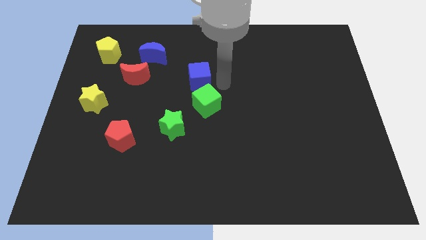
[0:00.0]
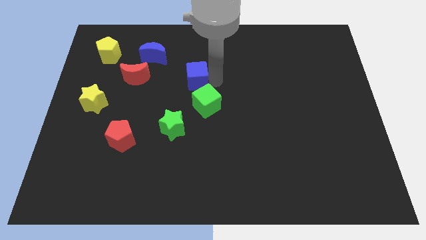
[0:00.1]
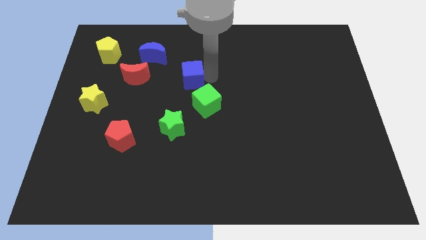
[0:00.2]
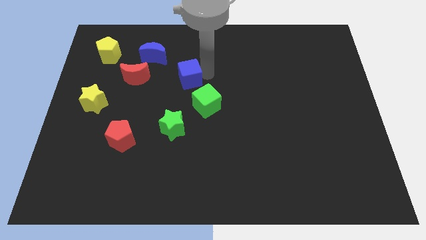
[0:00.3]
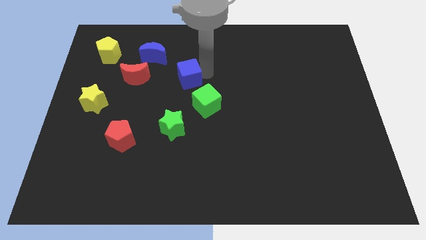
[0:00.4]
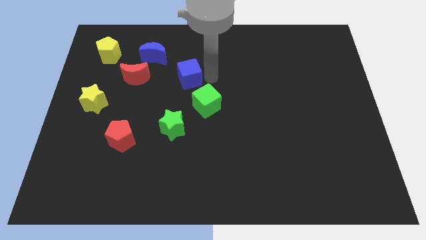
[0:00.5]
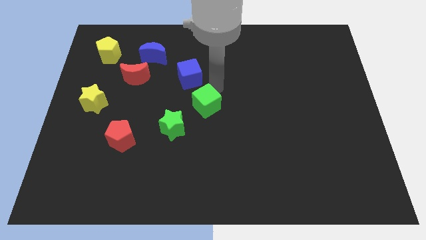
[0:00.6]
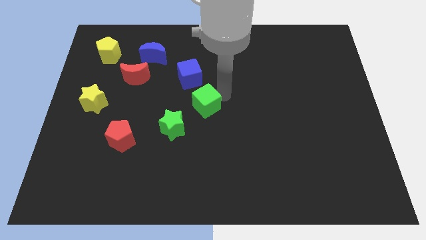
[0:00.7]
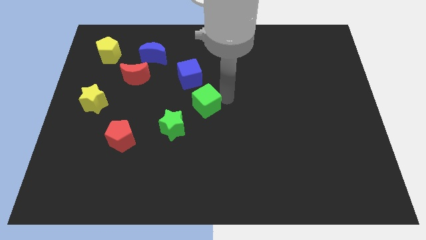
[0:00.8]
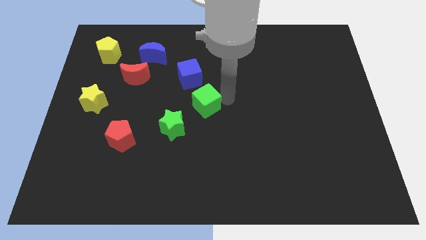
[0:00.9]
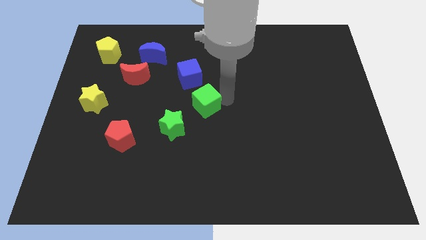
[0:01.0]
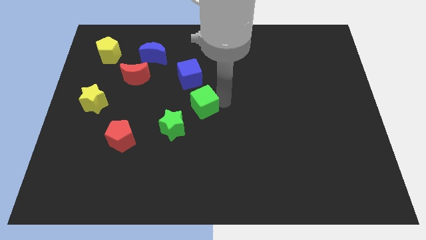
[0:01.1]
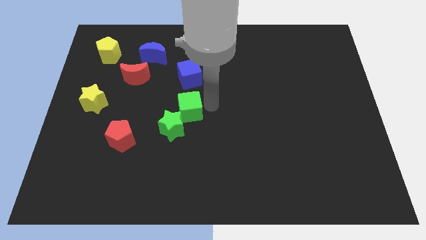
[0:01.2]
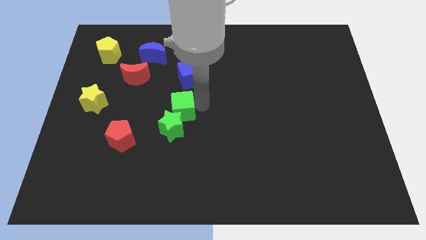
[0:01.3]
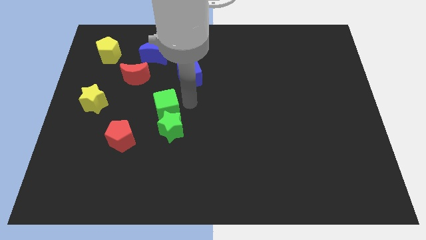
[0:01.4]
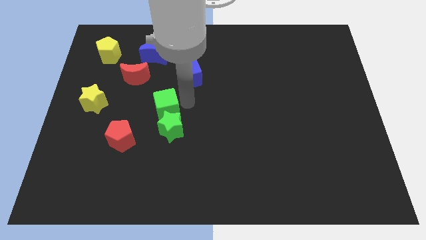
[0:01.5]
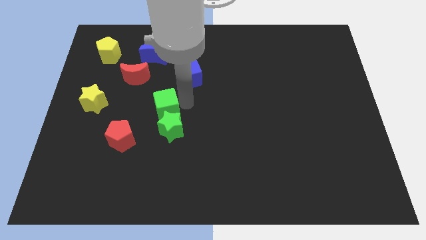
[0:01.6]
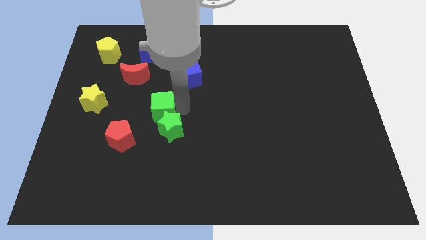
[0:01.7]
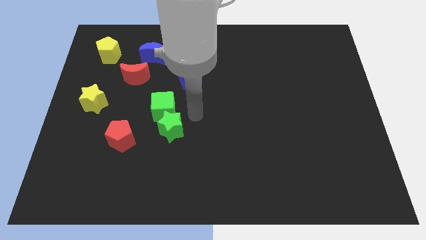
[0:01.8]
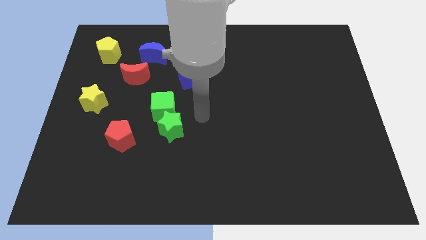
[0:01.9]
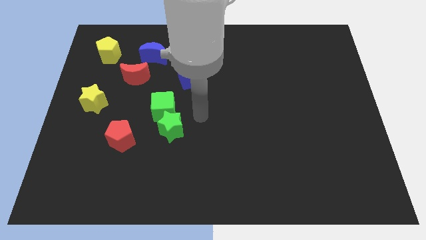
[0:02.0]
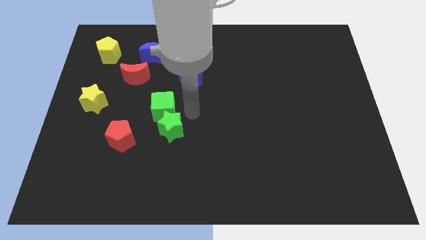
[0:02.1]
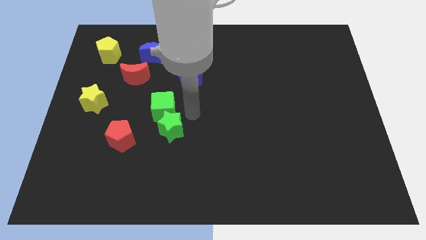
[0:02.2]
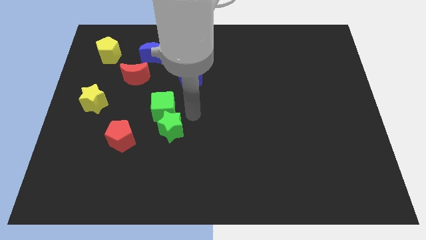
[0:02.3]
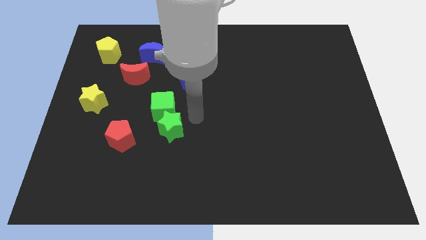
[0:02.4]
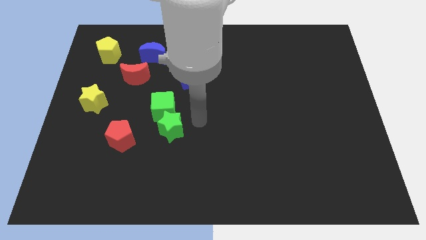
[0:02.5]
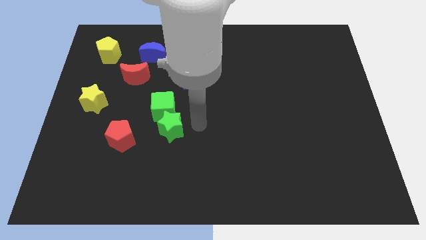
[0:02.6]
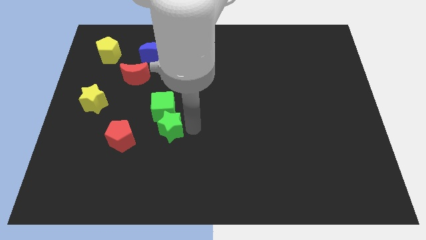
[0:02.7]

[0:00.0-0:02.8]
attach the green cube to the green star

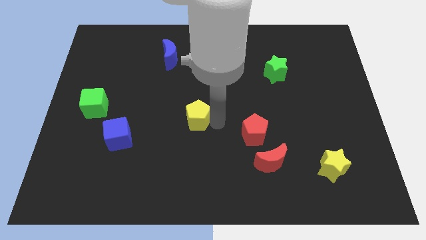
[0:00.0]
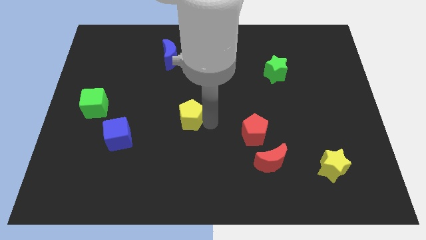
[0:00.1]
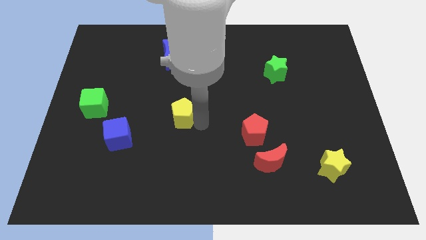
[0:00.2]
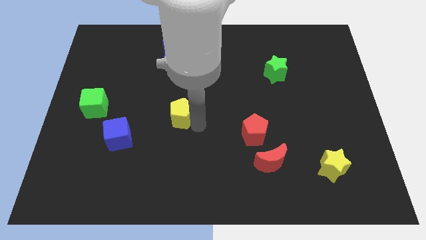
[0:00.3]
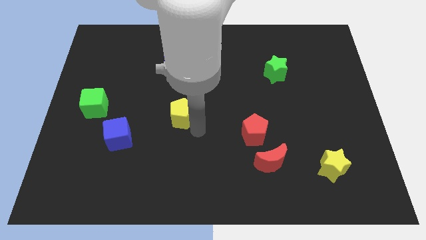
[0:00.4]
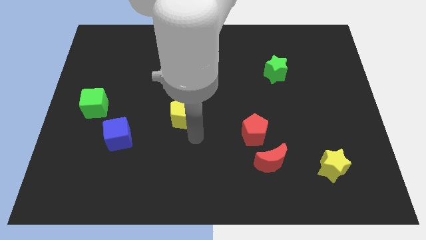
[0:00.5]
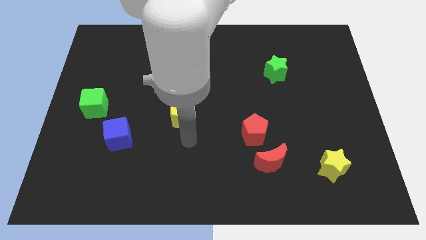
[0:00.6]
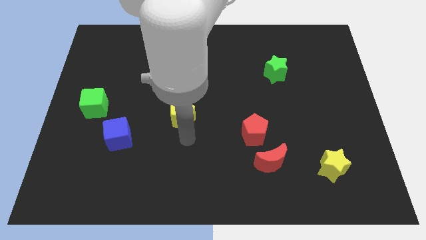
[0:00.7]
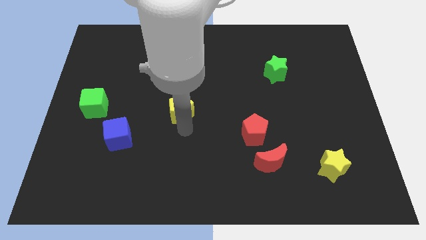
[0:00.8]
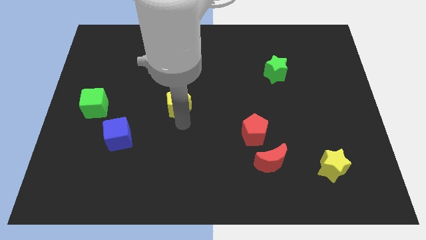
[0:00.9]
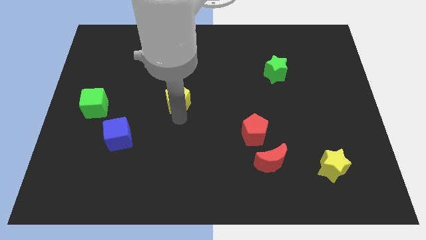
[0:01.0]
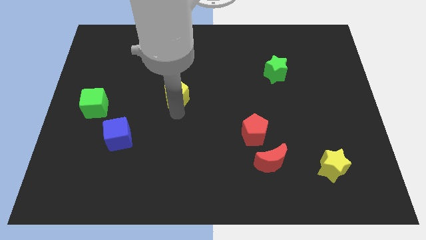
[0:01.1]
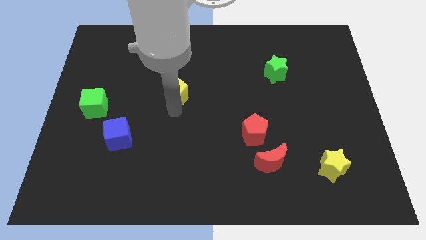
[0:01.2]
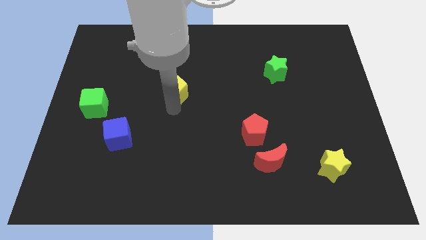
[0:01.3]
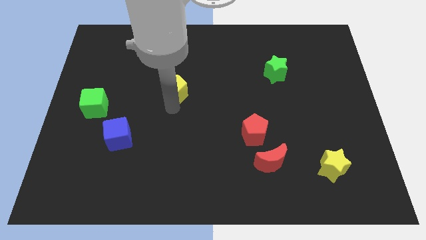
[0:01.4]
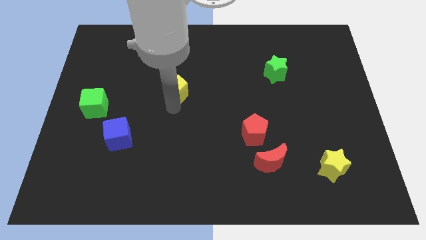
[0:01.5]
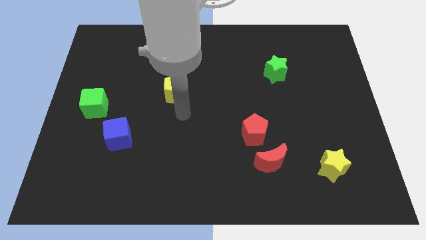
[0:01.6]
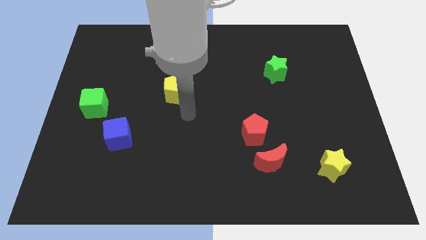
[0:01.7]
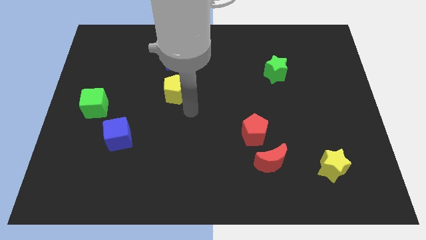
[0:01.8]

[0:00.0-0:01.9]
place yellow pentagon to the bottom of blue moon

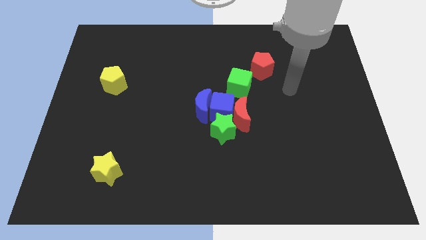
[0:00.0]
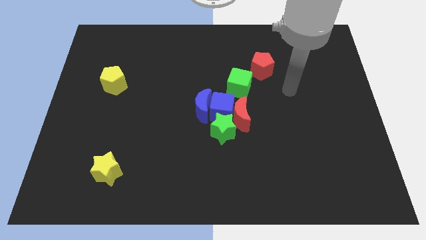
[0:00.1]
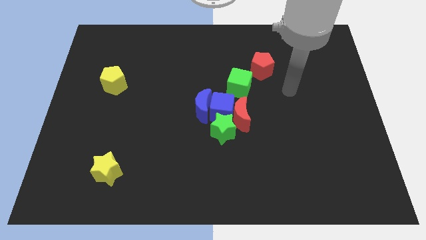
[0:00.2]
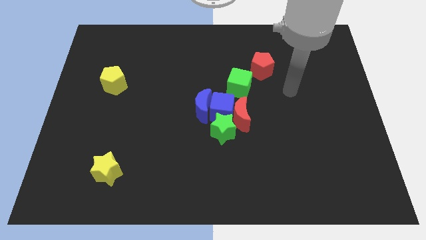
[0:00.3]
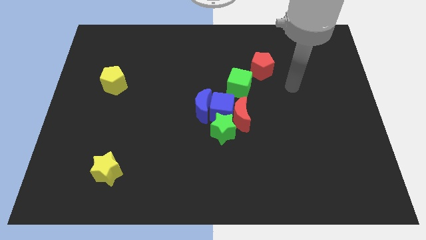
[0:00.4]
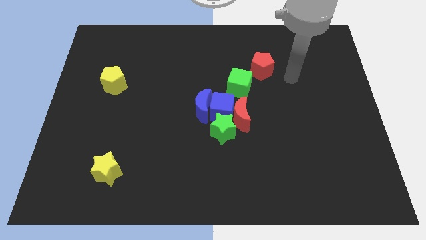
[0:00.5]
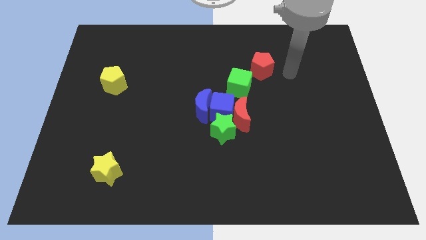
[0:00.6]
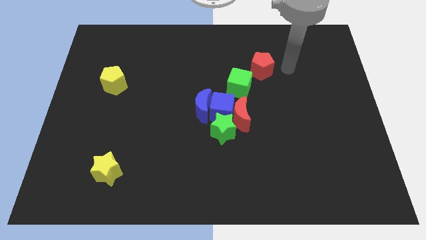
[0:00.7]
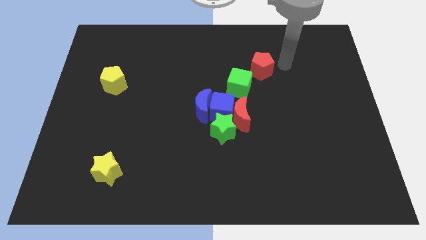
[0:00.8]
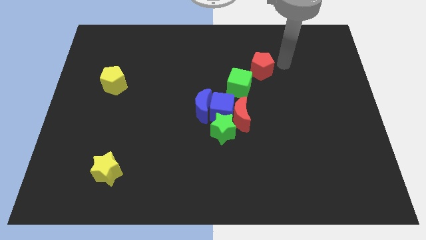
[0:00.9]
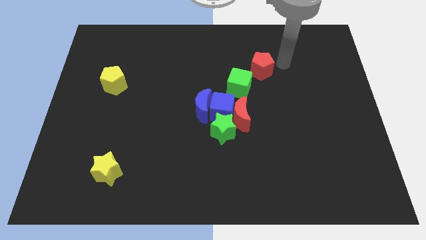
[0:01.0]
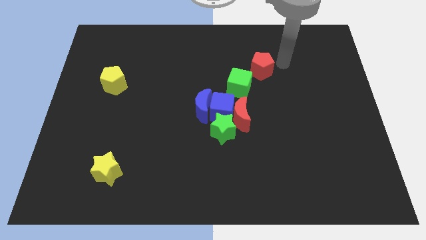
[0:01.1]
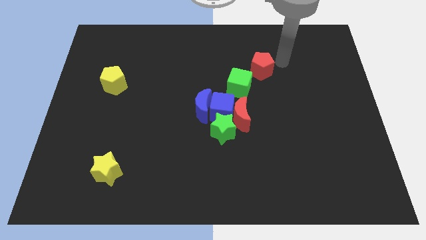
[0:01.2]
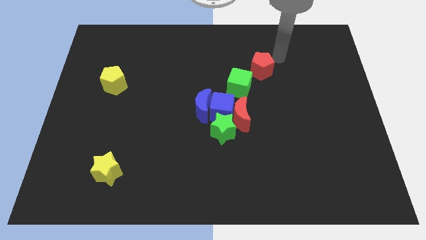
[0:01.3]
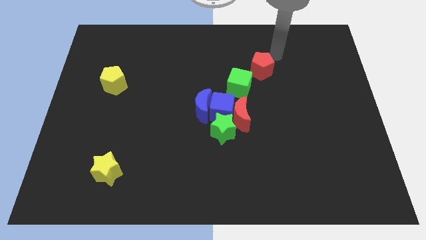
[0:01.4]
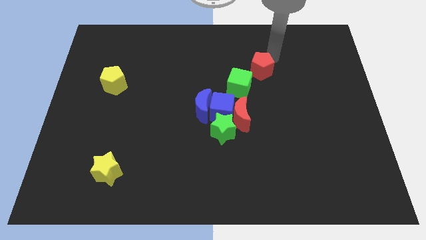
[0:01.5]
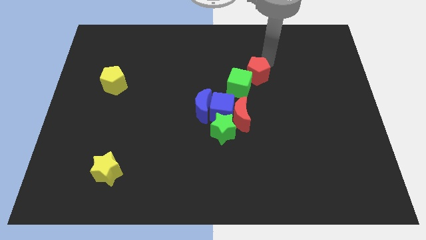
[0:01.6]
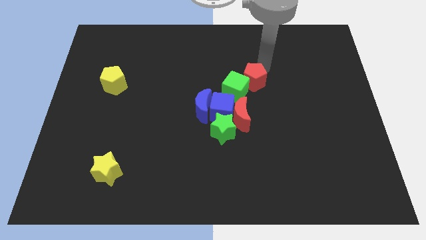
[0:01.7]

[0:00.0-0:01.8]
move your arm close to the red pentagon

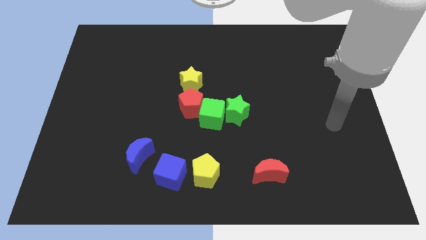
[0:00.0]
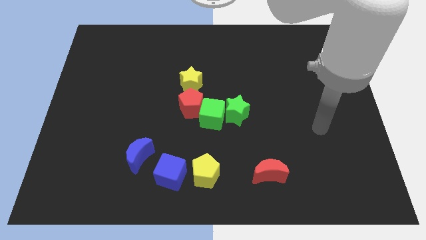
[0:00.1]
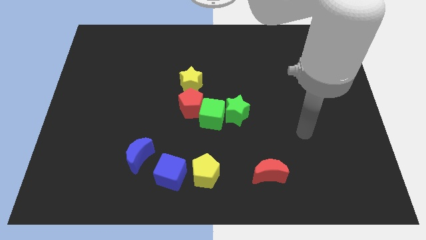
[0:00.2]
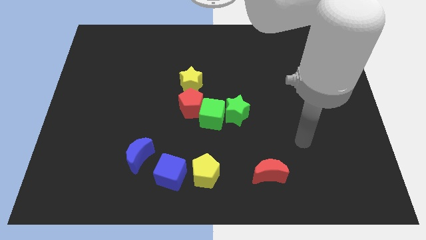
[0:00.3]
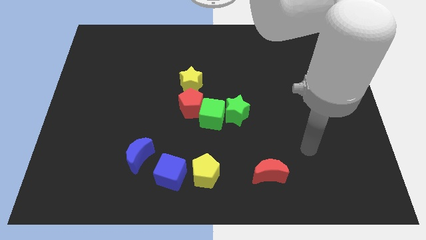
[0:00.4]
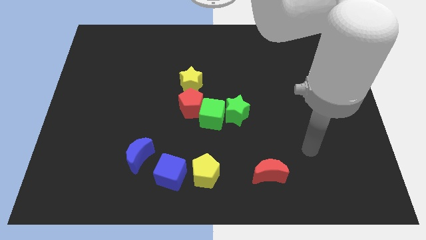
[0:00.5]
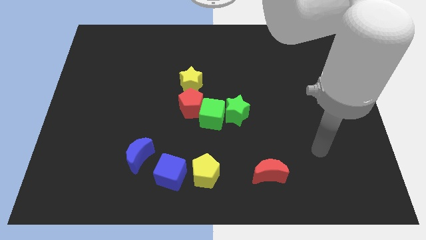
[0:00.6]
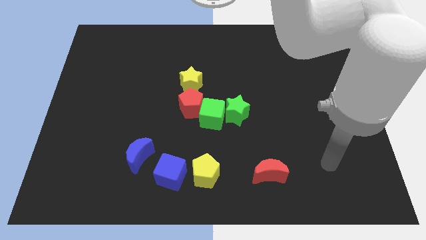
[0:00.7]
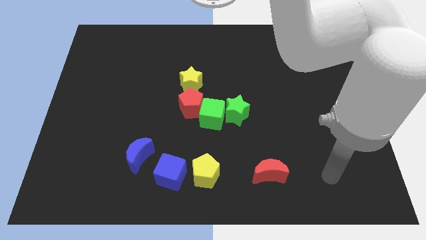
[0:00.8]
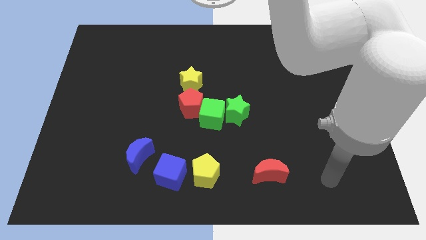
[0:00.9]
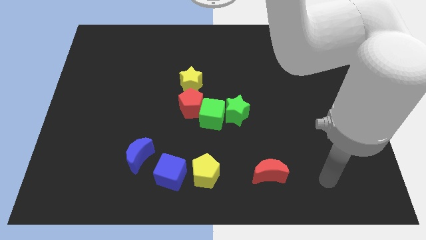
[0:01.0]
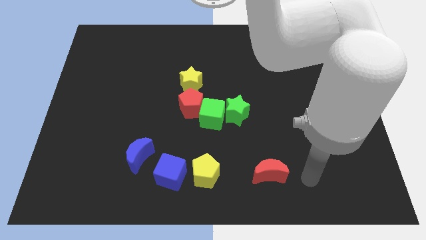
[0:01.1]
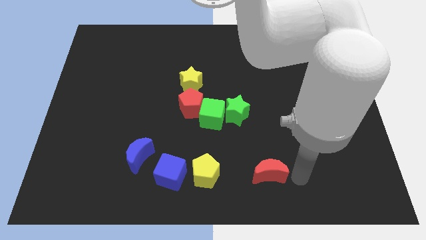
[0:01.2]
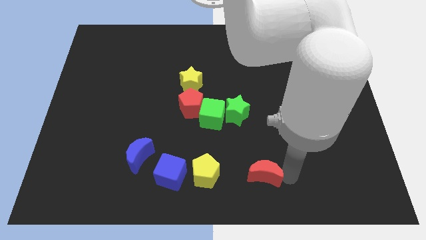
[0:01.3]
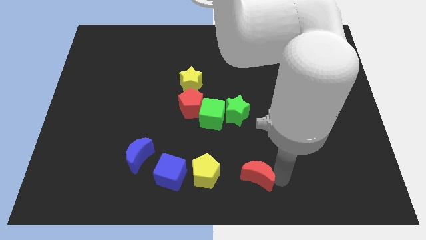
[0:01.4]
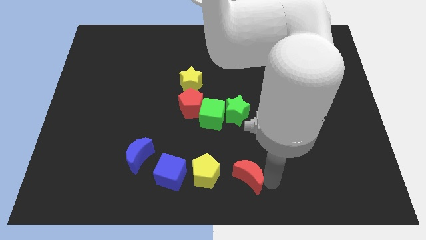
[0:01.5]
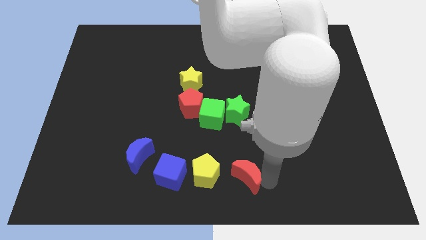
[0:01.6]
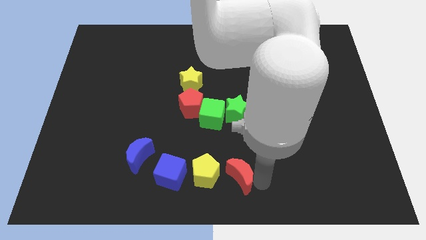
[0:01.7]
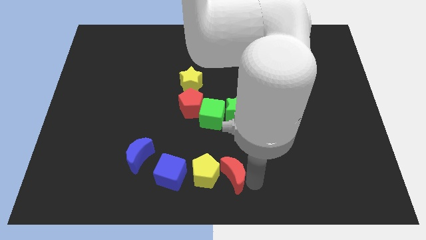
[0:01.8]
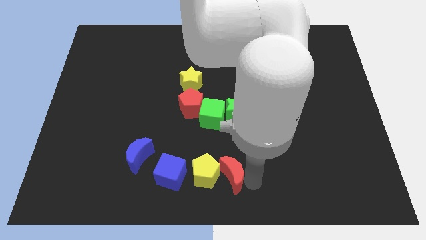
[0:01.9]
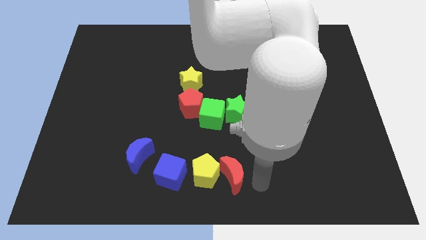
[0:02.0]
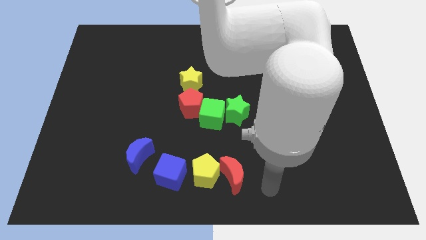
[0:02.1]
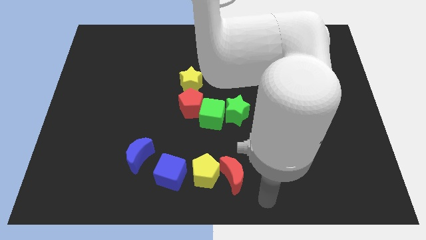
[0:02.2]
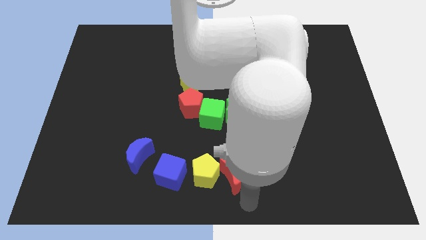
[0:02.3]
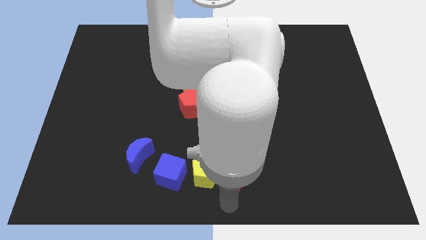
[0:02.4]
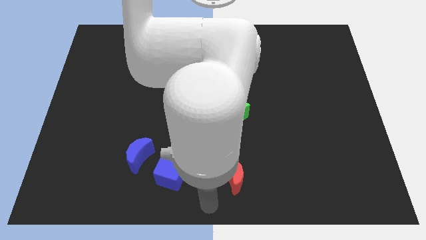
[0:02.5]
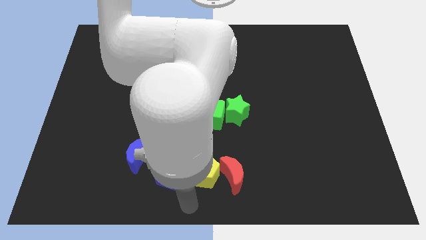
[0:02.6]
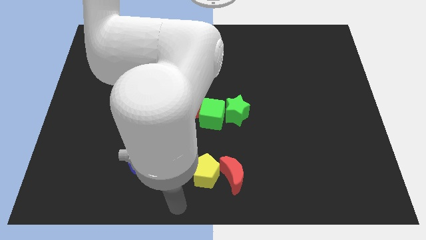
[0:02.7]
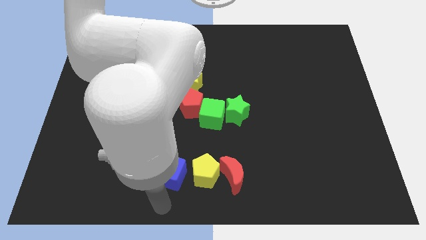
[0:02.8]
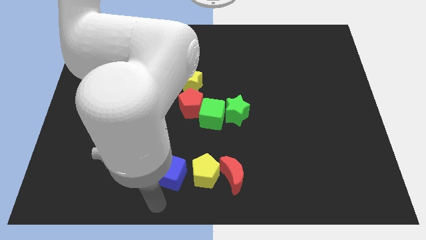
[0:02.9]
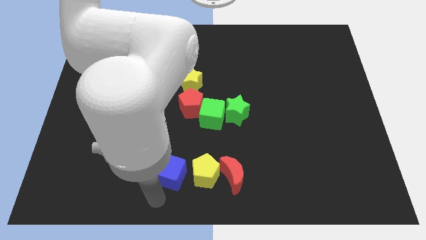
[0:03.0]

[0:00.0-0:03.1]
put the red moon at the right side of the yellow pentagon
